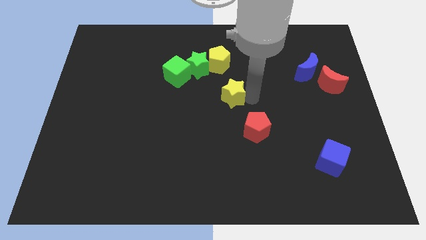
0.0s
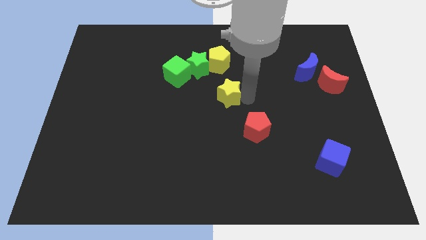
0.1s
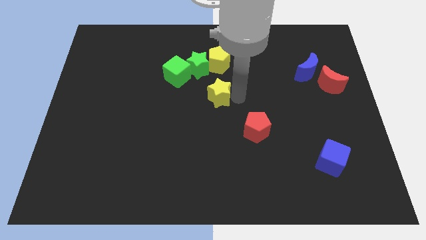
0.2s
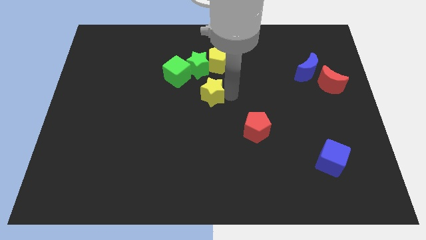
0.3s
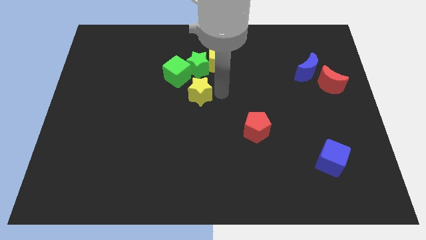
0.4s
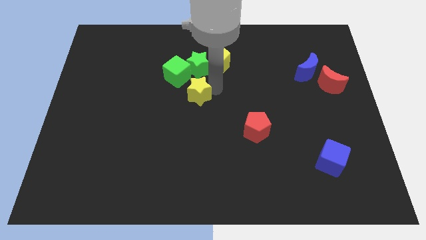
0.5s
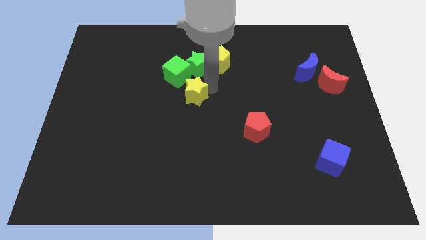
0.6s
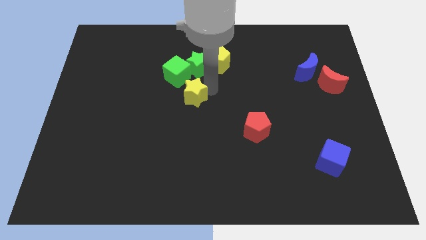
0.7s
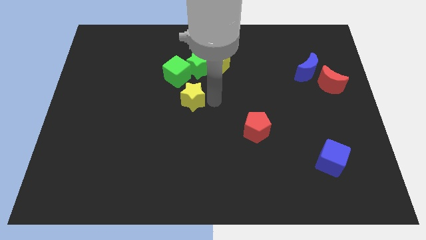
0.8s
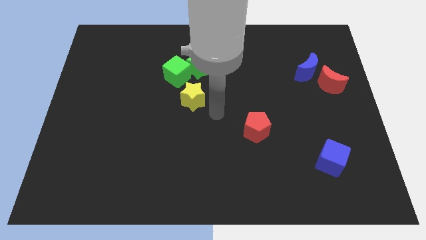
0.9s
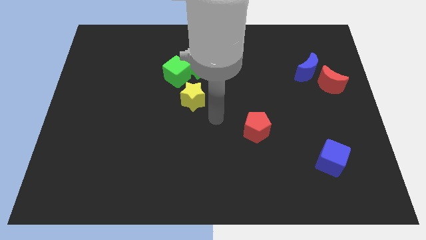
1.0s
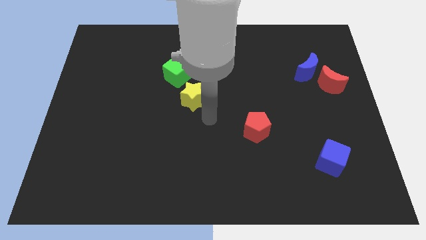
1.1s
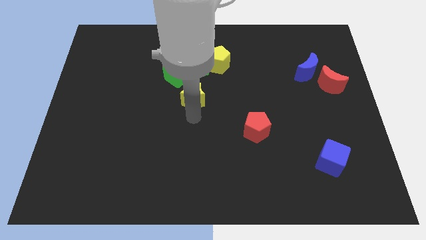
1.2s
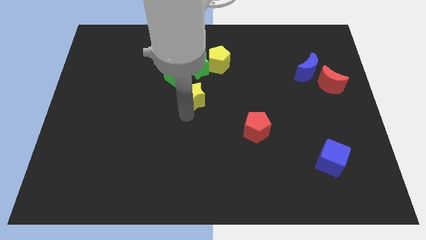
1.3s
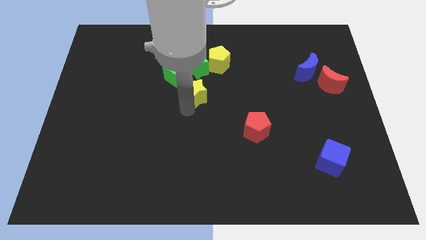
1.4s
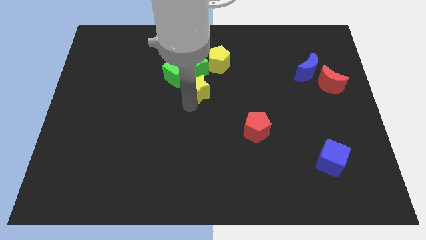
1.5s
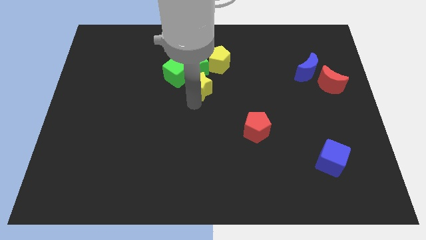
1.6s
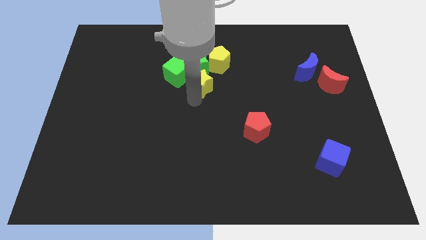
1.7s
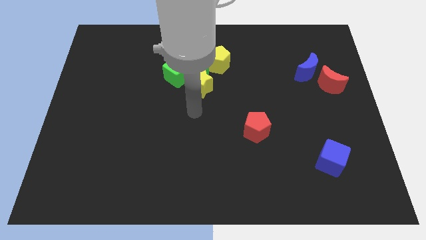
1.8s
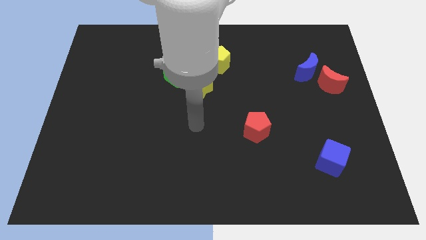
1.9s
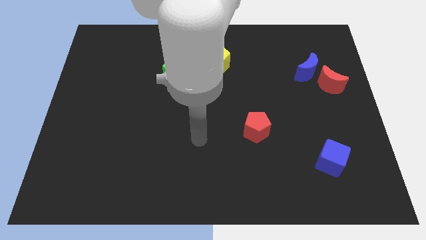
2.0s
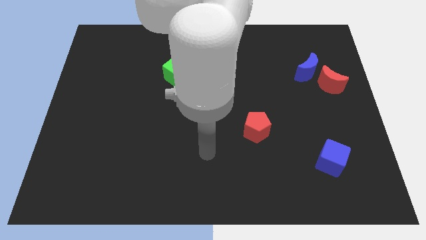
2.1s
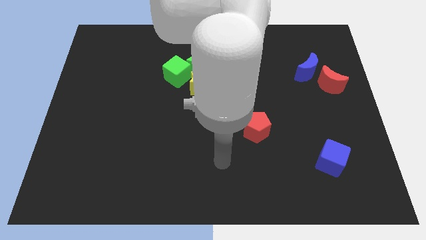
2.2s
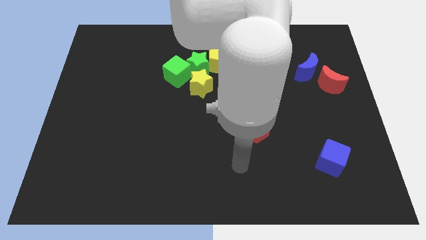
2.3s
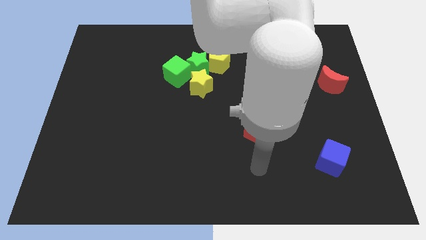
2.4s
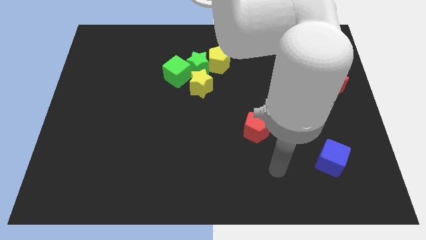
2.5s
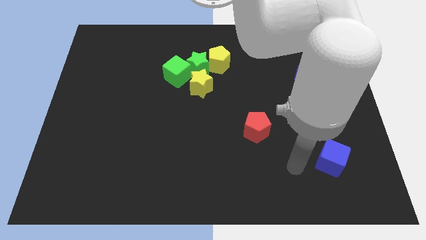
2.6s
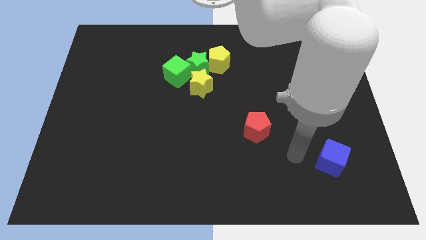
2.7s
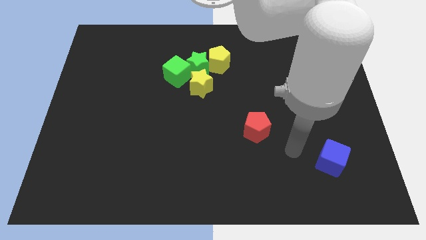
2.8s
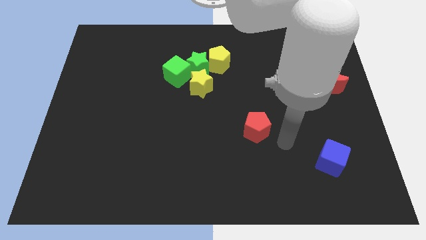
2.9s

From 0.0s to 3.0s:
move the yellow star close to the bottom of the green star

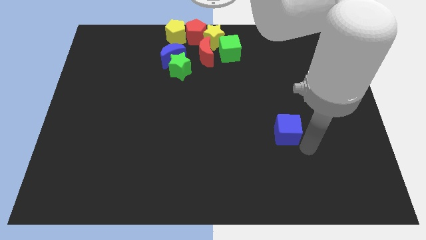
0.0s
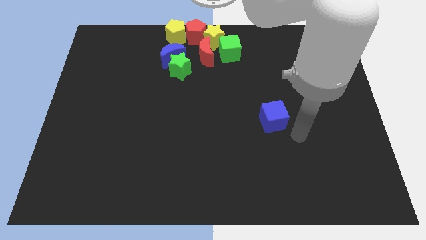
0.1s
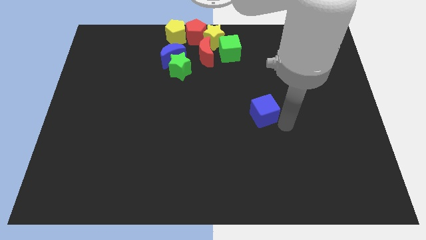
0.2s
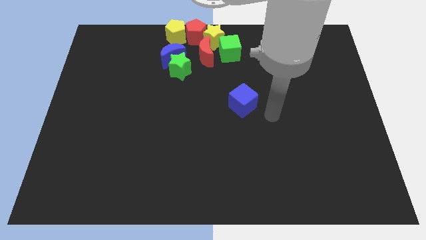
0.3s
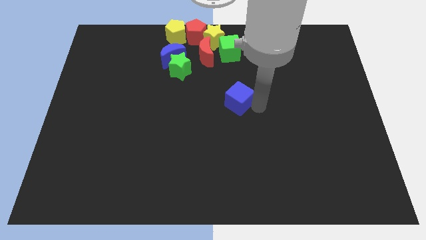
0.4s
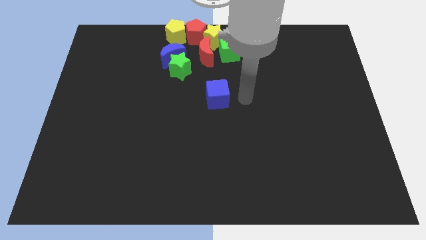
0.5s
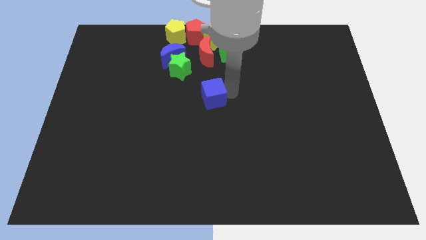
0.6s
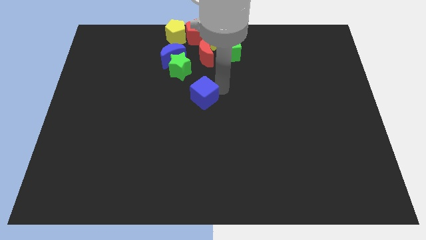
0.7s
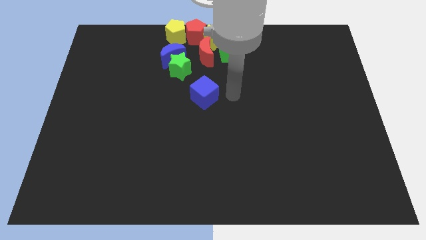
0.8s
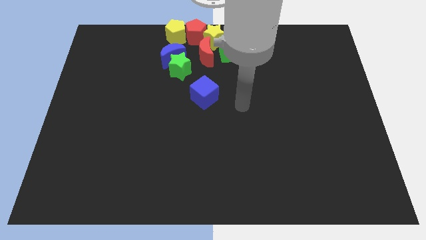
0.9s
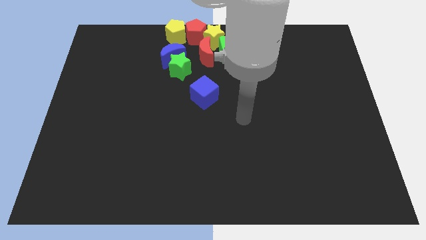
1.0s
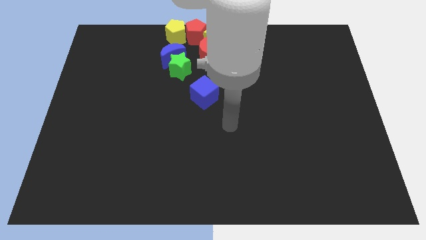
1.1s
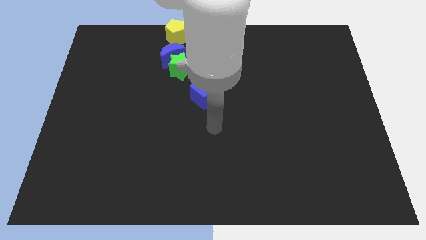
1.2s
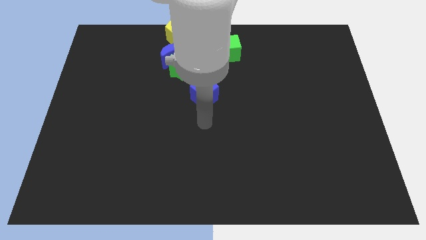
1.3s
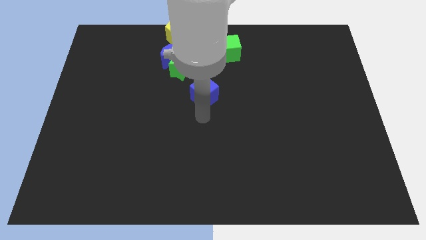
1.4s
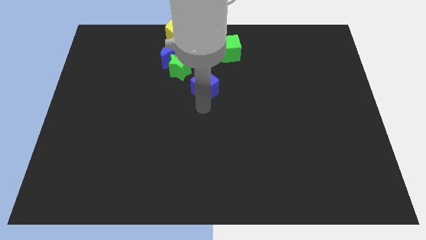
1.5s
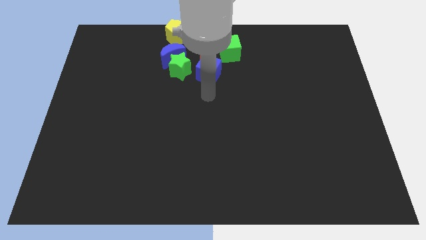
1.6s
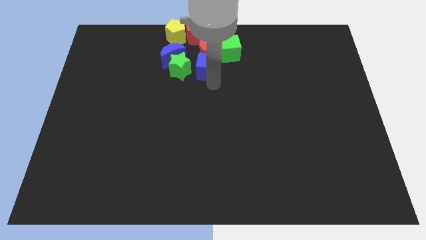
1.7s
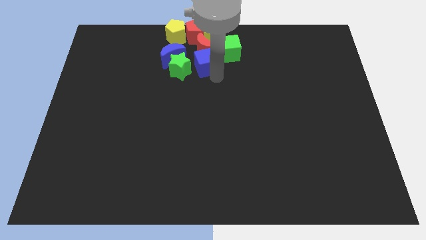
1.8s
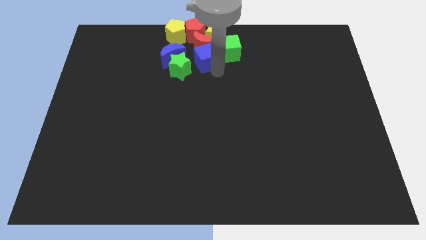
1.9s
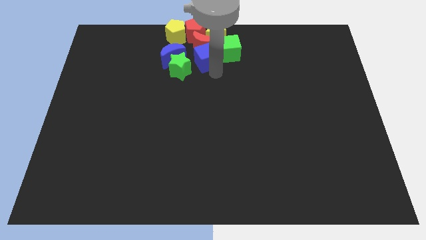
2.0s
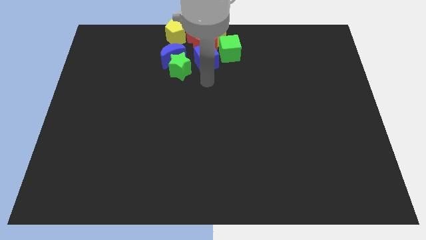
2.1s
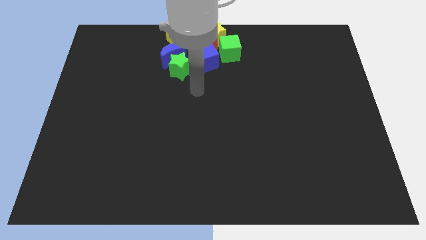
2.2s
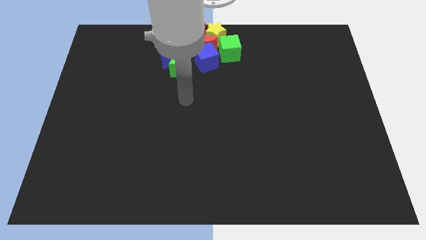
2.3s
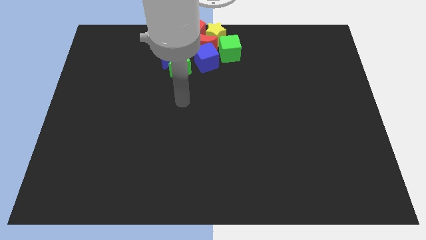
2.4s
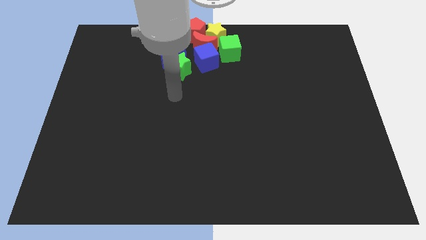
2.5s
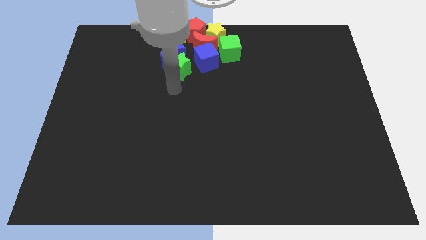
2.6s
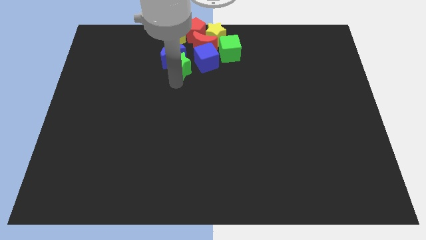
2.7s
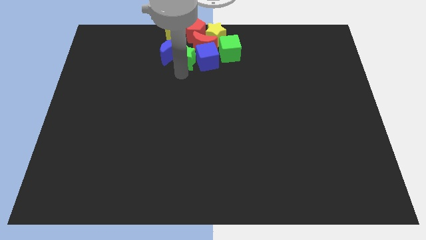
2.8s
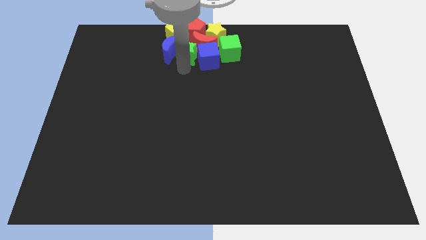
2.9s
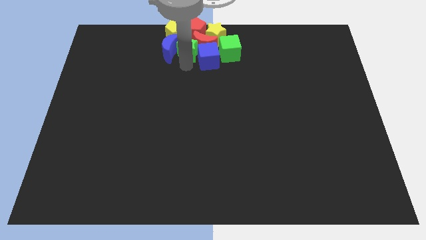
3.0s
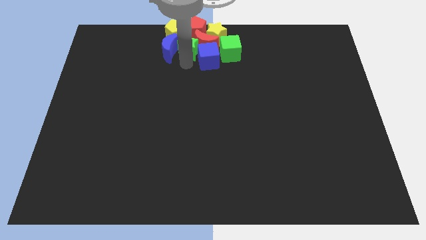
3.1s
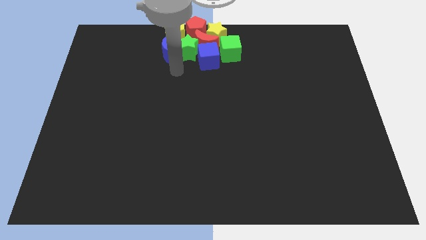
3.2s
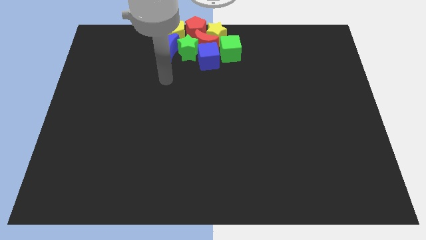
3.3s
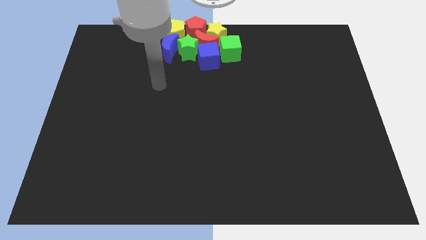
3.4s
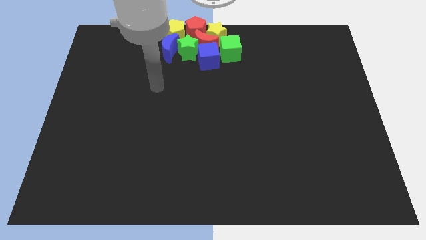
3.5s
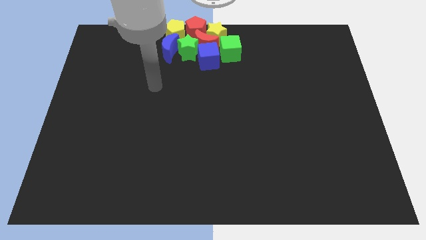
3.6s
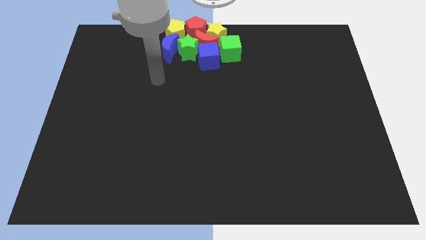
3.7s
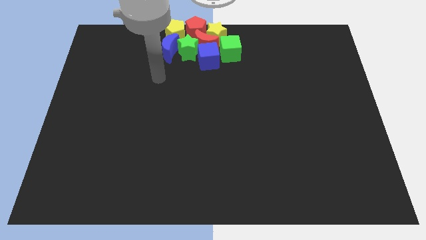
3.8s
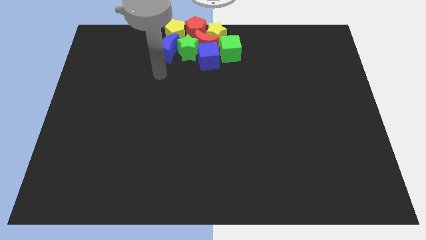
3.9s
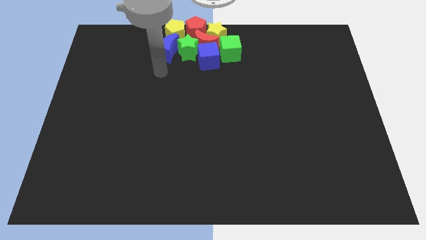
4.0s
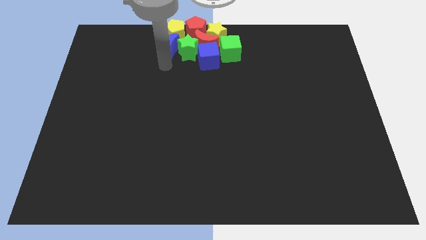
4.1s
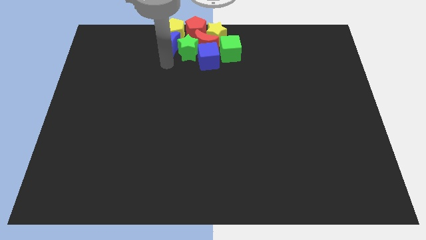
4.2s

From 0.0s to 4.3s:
push the blue cube and green star into the group of blocks

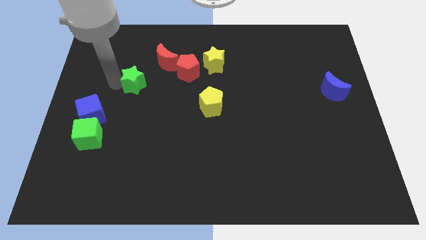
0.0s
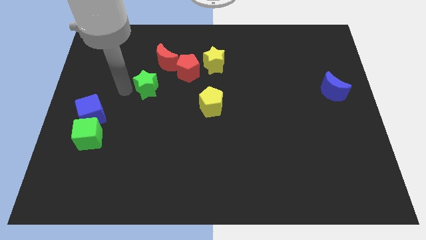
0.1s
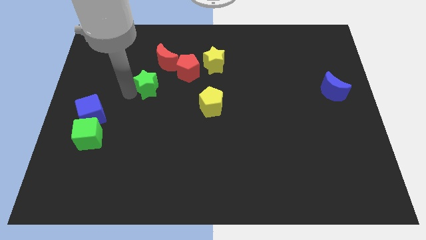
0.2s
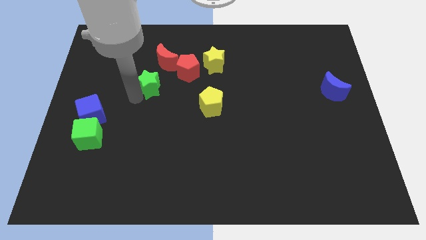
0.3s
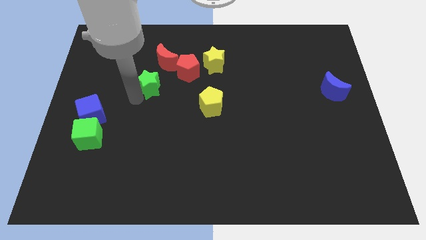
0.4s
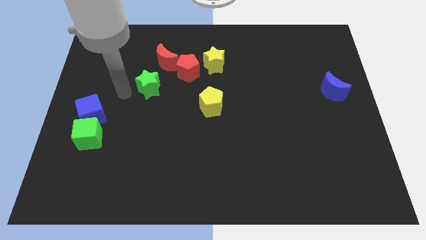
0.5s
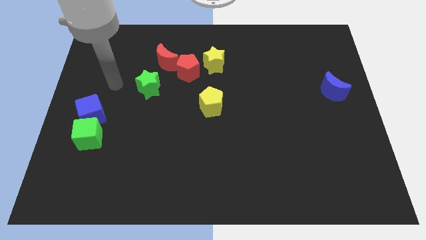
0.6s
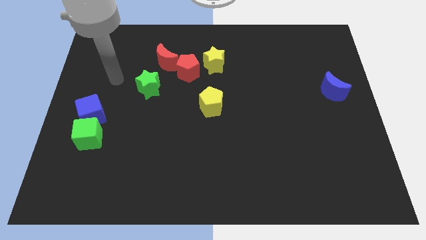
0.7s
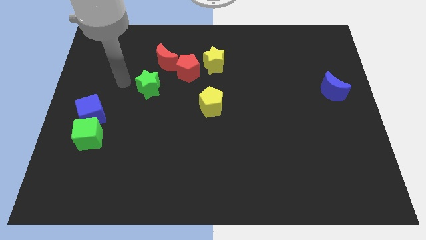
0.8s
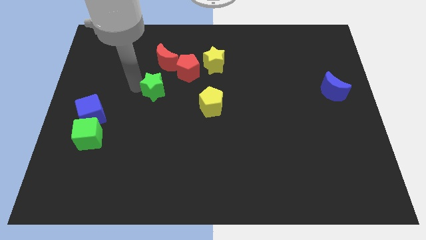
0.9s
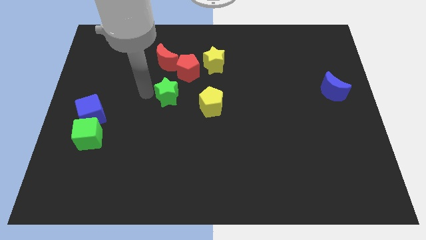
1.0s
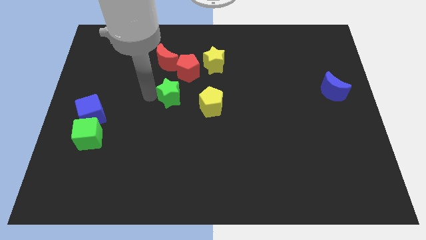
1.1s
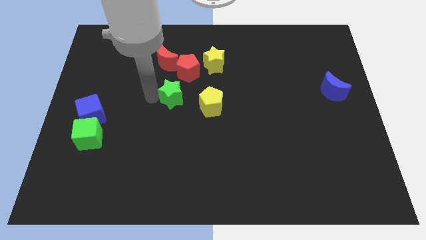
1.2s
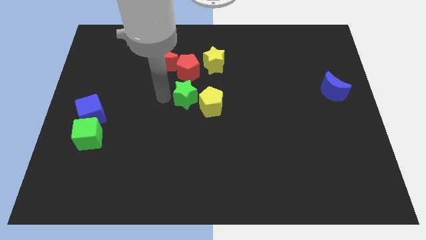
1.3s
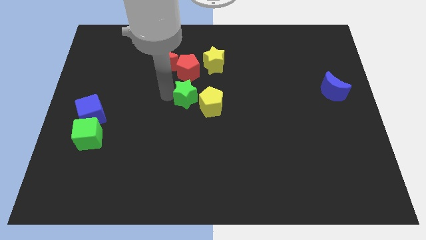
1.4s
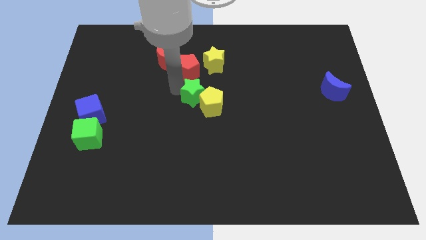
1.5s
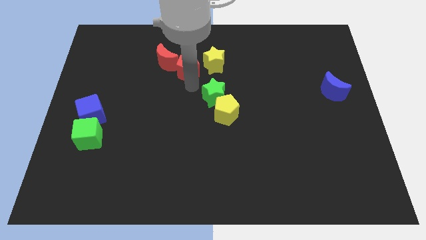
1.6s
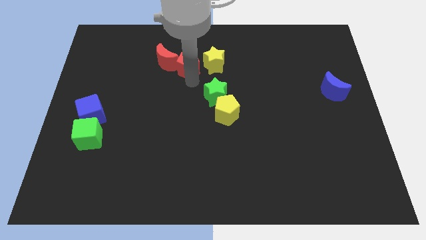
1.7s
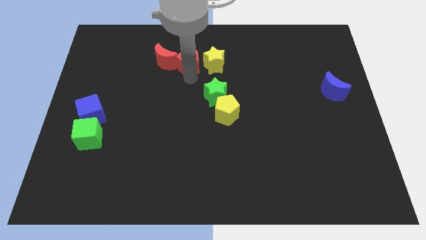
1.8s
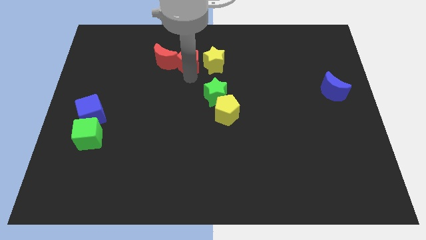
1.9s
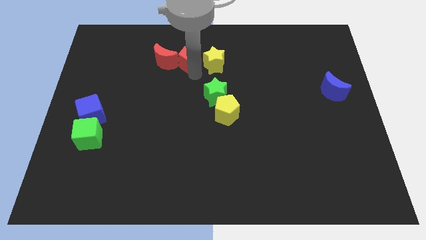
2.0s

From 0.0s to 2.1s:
move green star into yellow pentagon
